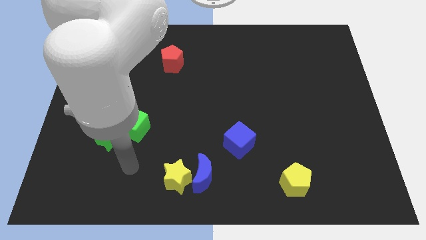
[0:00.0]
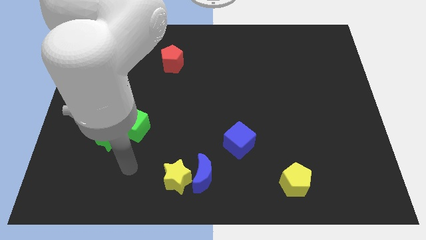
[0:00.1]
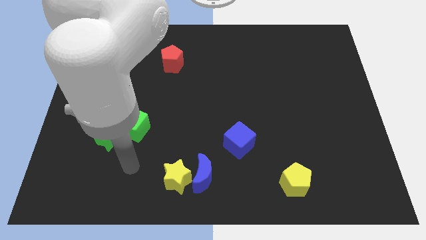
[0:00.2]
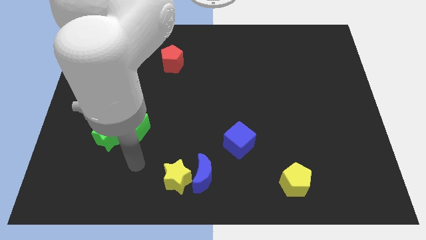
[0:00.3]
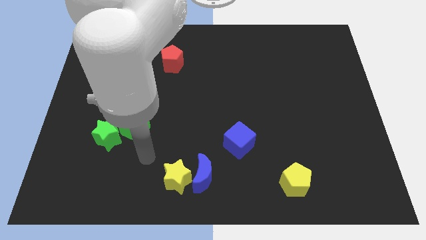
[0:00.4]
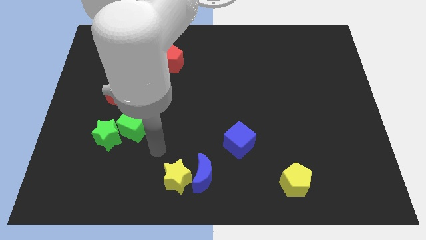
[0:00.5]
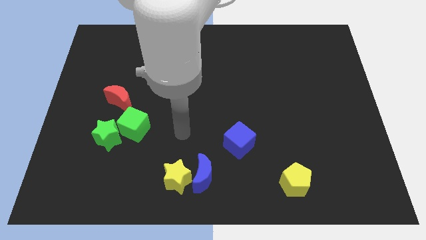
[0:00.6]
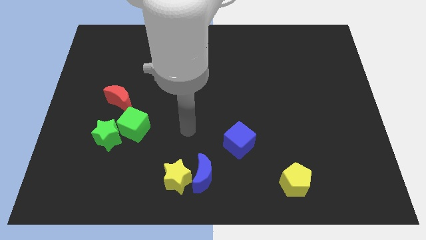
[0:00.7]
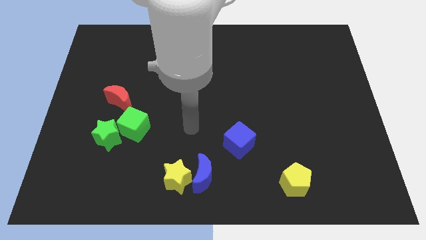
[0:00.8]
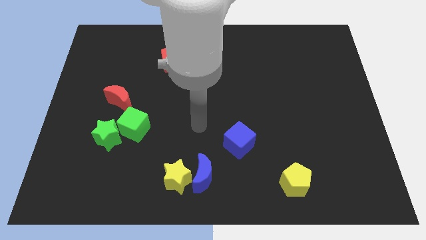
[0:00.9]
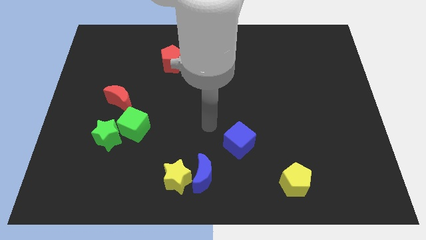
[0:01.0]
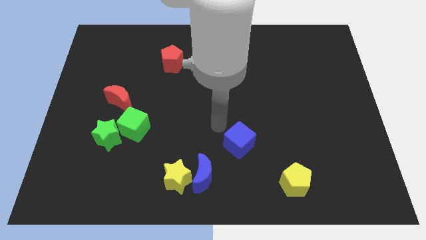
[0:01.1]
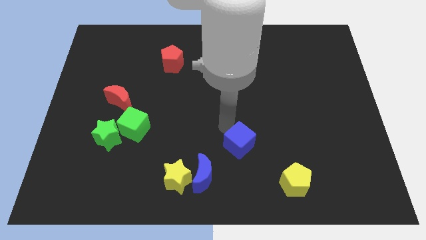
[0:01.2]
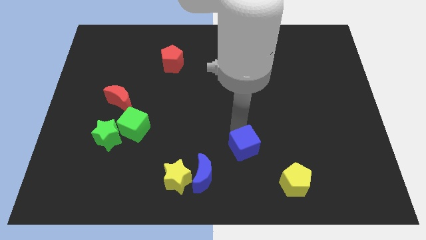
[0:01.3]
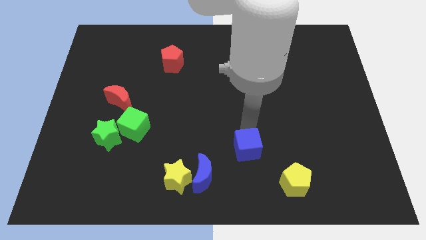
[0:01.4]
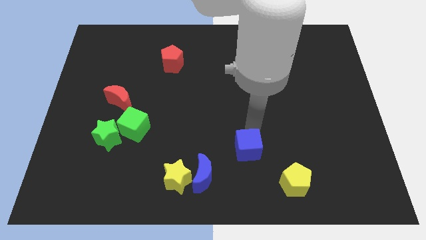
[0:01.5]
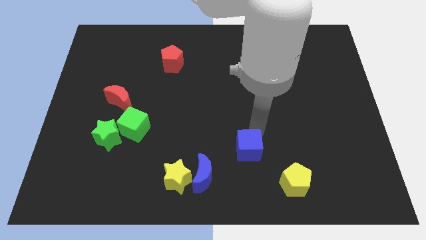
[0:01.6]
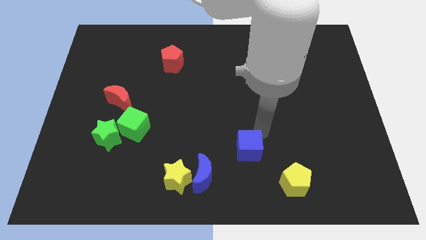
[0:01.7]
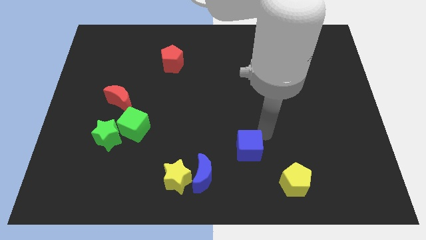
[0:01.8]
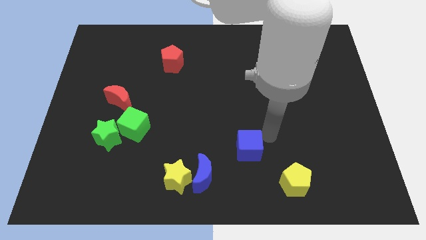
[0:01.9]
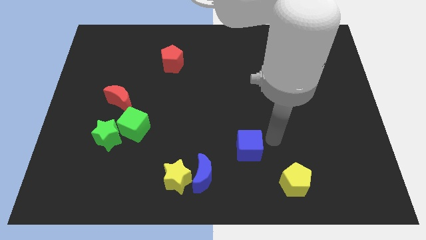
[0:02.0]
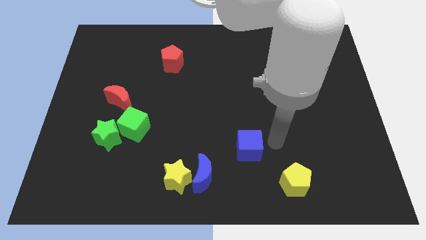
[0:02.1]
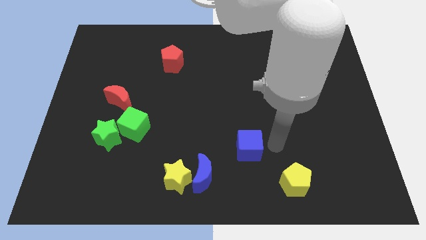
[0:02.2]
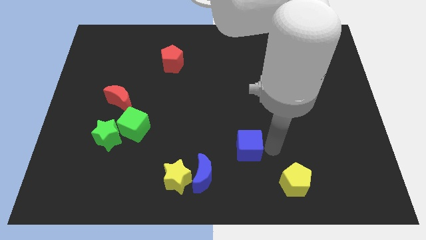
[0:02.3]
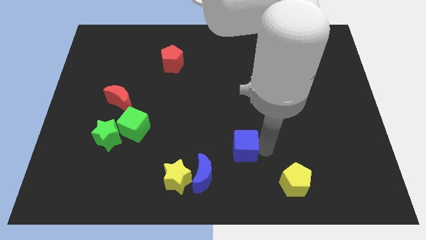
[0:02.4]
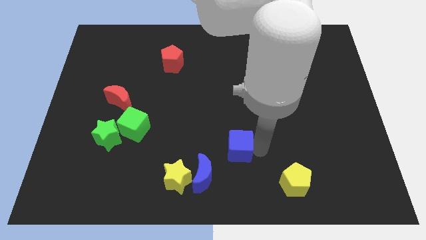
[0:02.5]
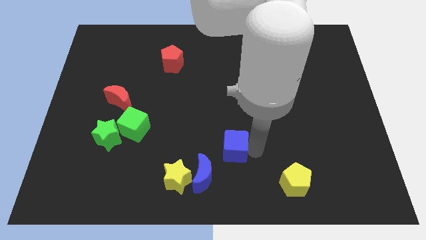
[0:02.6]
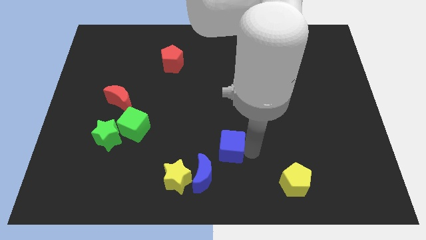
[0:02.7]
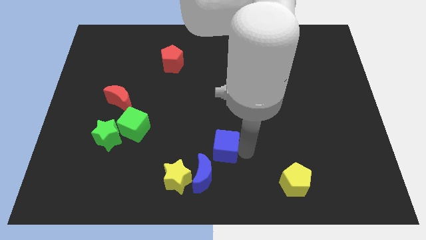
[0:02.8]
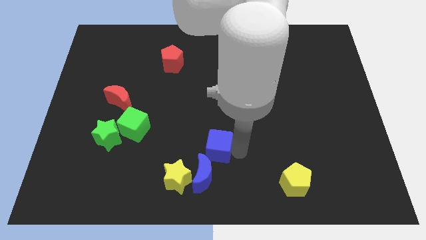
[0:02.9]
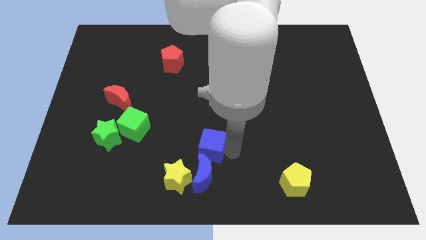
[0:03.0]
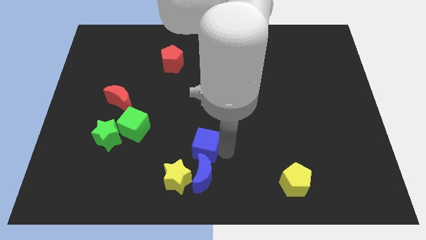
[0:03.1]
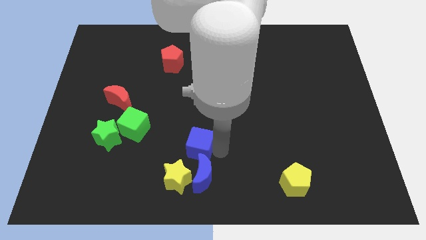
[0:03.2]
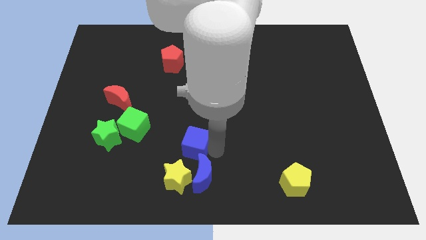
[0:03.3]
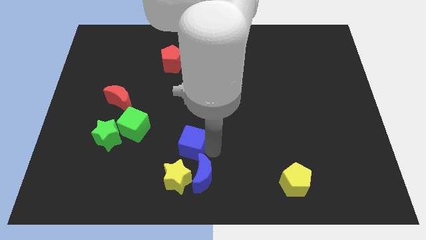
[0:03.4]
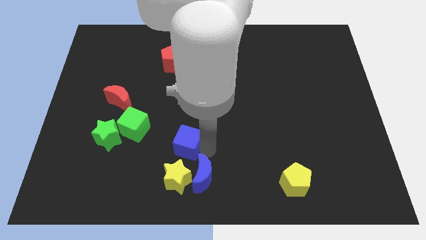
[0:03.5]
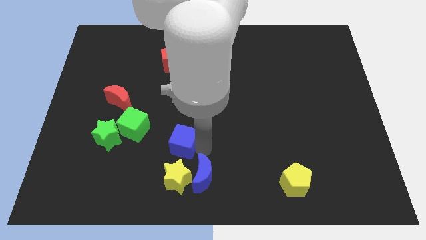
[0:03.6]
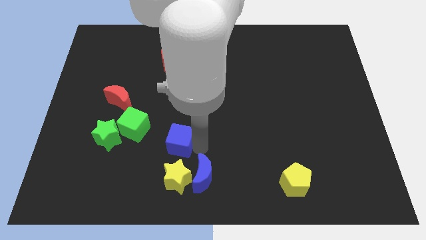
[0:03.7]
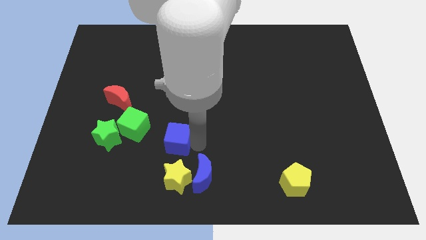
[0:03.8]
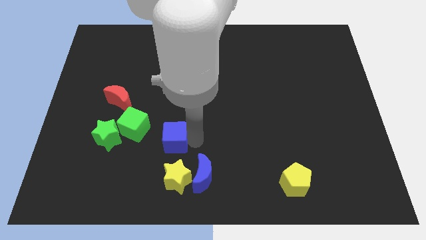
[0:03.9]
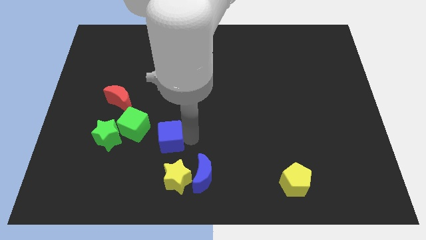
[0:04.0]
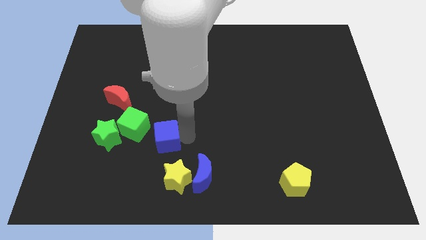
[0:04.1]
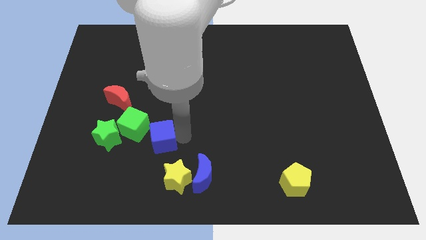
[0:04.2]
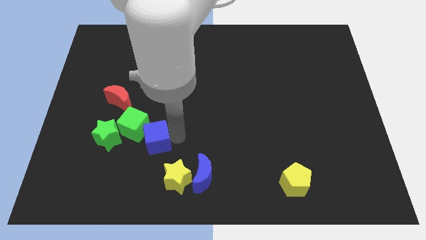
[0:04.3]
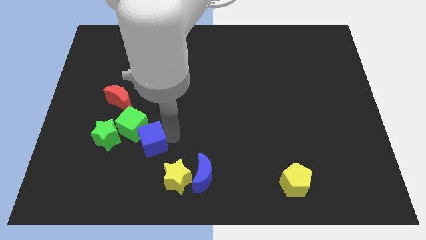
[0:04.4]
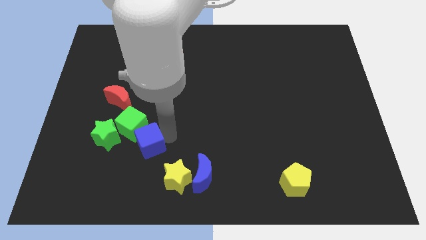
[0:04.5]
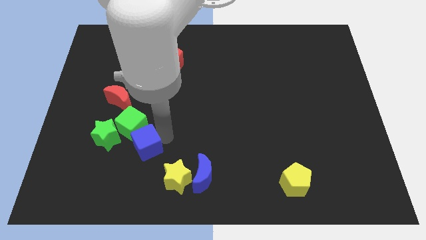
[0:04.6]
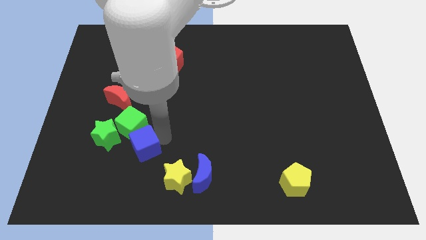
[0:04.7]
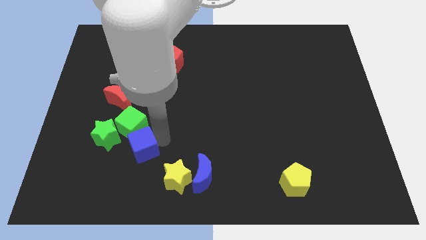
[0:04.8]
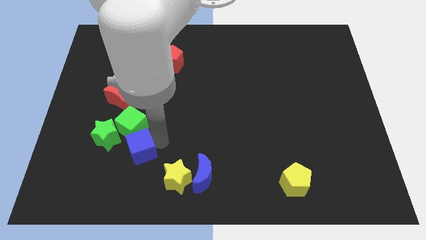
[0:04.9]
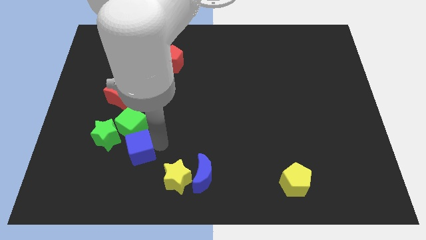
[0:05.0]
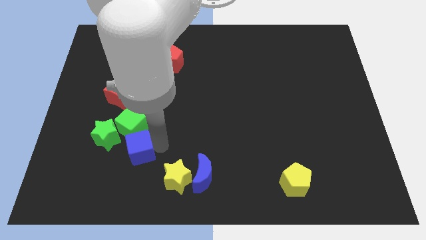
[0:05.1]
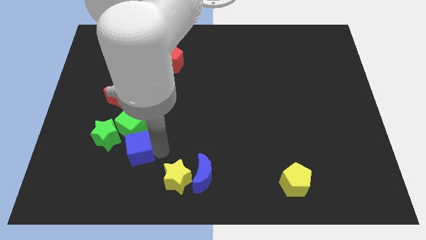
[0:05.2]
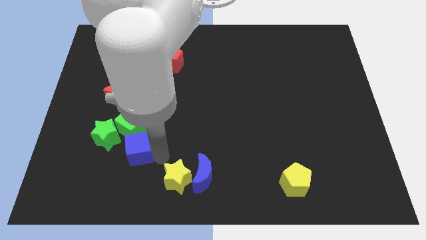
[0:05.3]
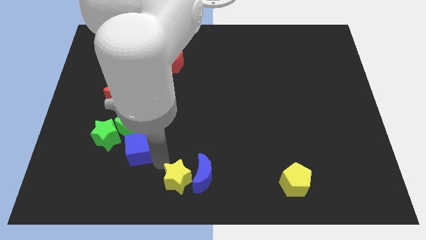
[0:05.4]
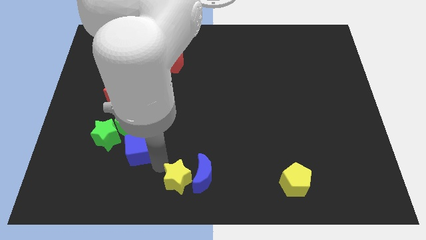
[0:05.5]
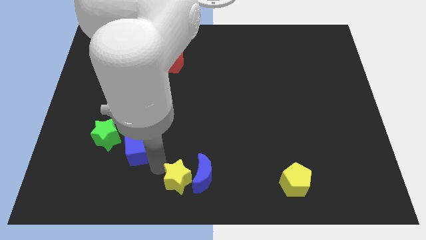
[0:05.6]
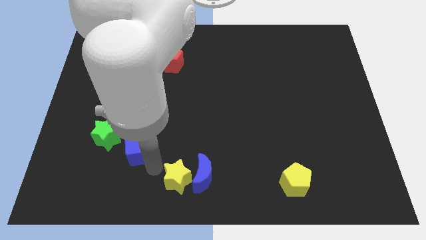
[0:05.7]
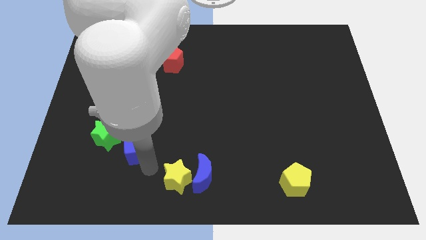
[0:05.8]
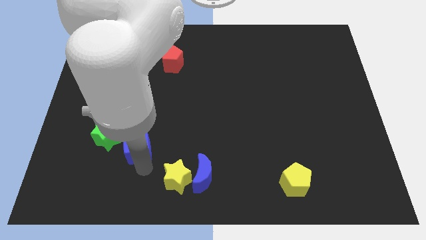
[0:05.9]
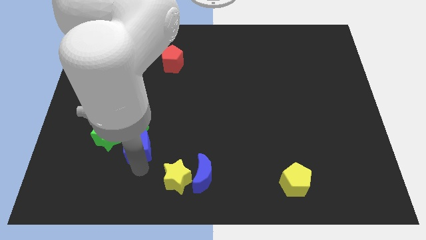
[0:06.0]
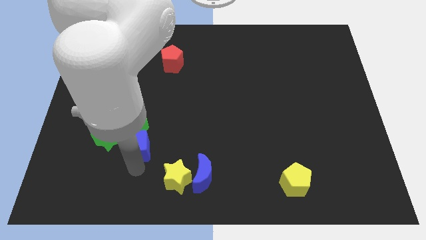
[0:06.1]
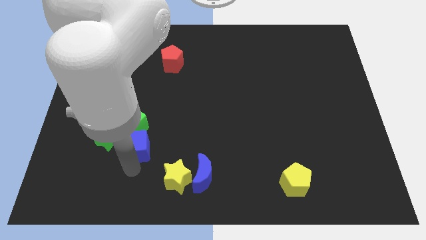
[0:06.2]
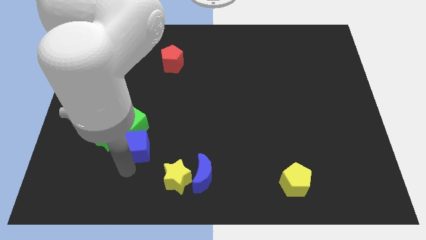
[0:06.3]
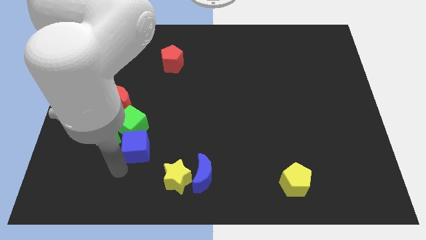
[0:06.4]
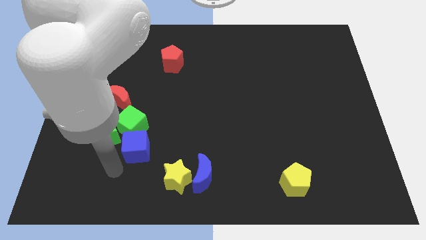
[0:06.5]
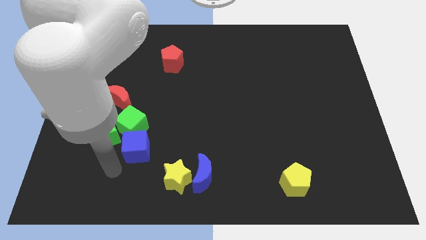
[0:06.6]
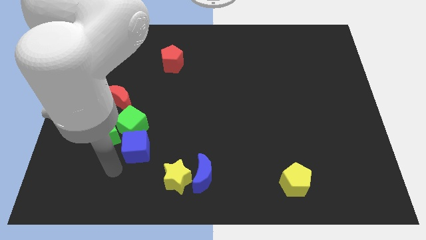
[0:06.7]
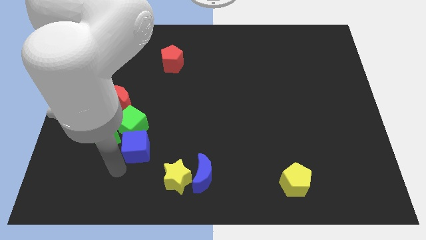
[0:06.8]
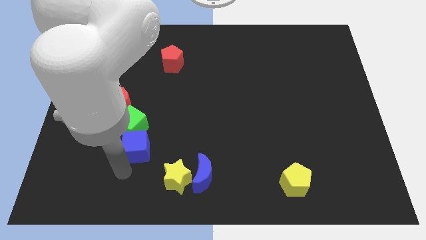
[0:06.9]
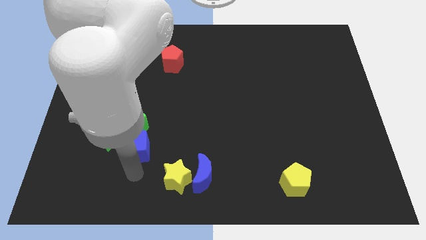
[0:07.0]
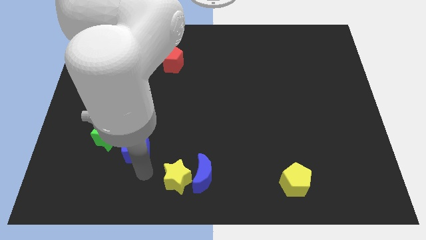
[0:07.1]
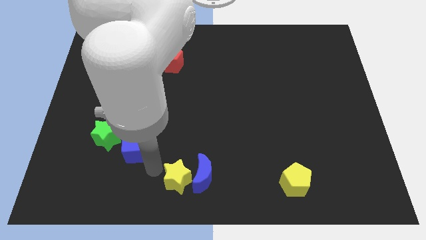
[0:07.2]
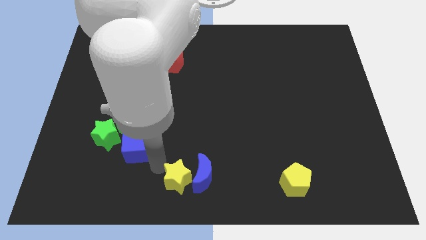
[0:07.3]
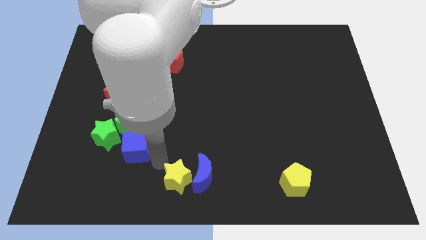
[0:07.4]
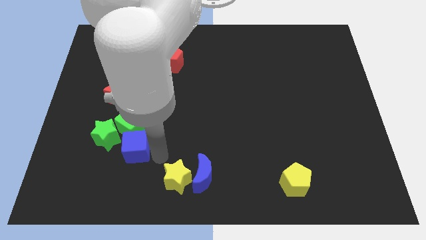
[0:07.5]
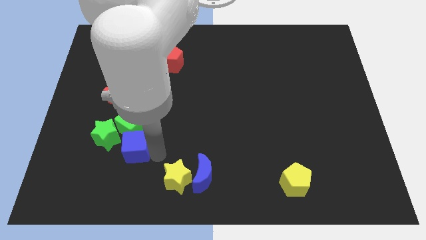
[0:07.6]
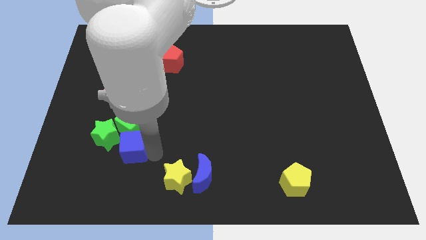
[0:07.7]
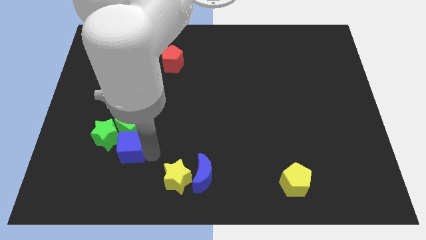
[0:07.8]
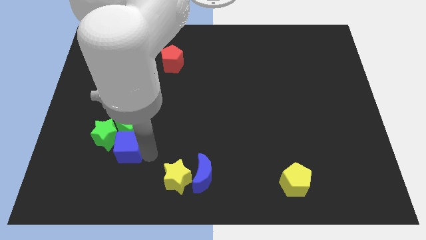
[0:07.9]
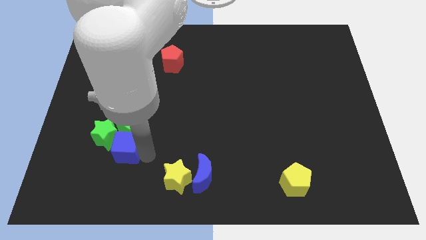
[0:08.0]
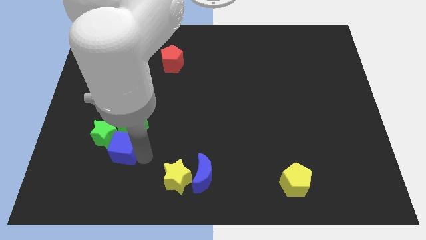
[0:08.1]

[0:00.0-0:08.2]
put the blue cube towards the green star

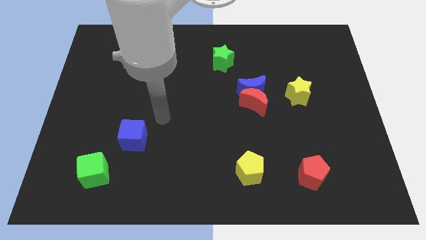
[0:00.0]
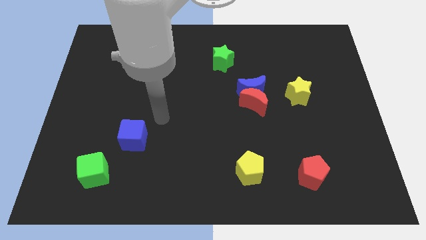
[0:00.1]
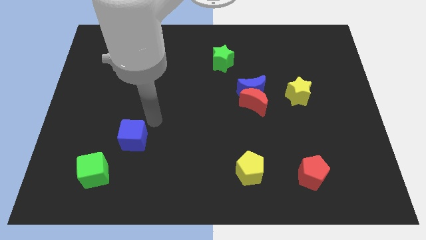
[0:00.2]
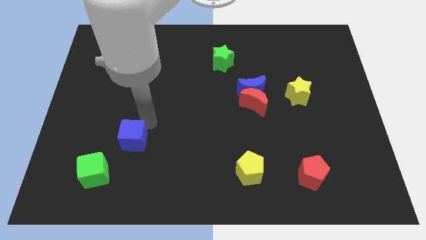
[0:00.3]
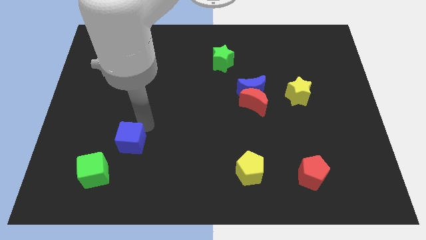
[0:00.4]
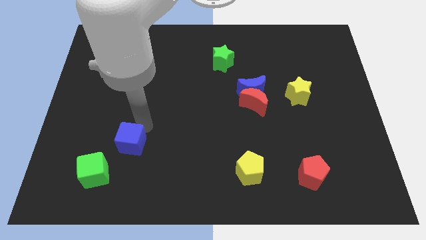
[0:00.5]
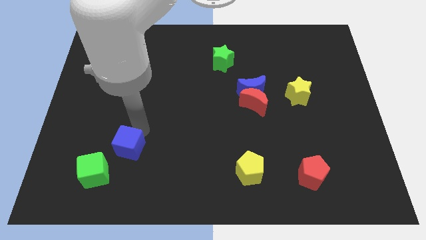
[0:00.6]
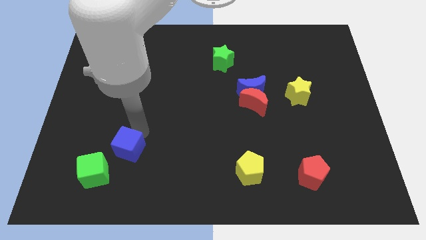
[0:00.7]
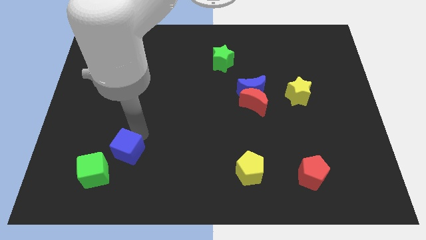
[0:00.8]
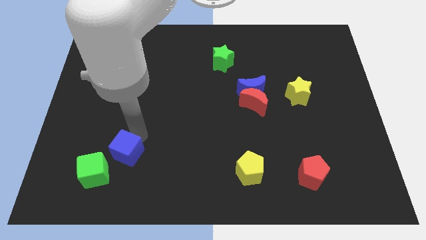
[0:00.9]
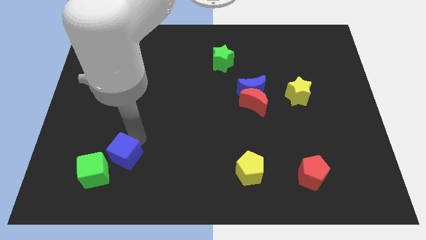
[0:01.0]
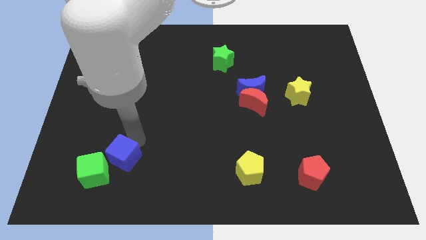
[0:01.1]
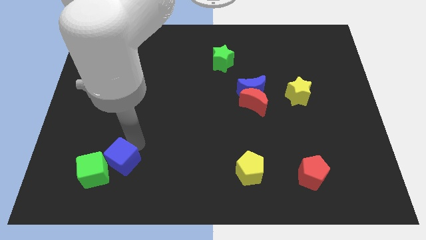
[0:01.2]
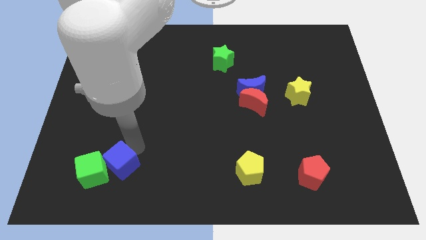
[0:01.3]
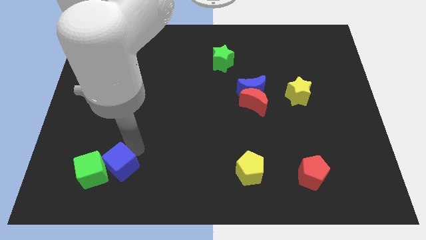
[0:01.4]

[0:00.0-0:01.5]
move the blue cube next to the green cube
